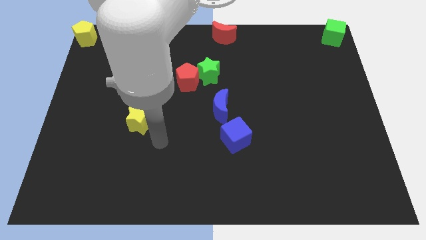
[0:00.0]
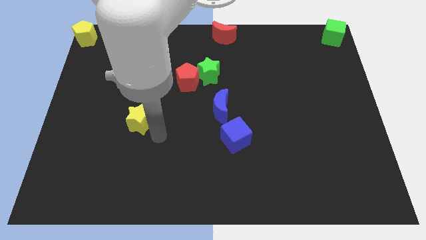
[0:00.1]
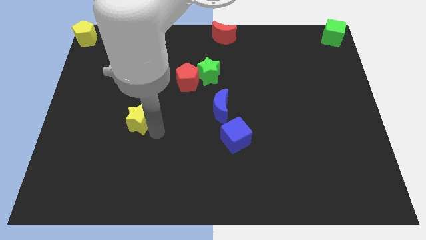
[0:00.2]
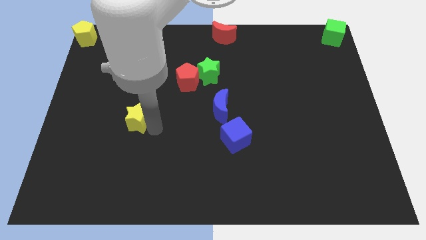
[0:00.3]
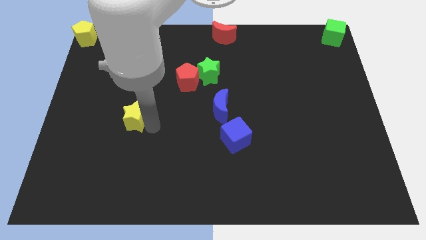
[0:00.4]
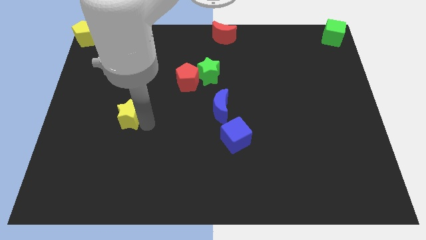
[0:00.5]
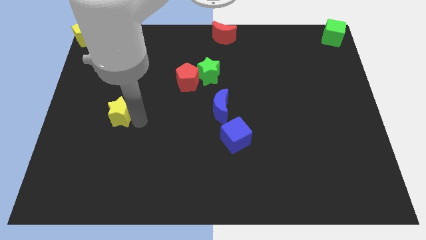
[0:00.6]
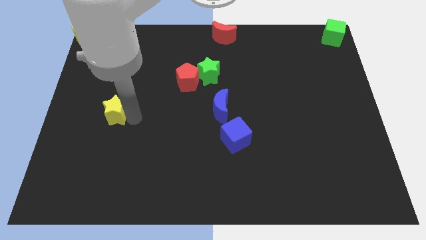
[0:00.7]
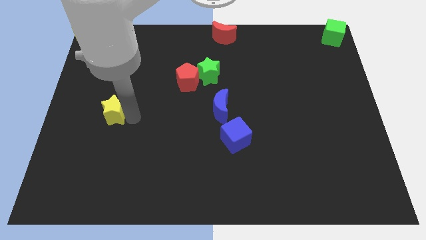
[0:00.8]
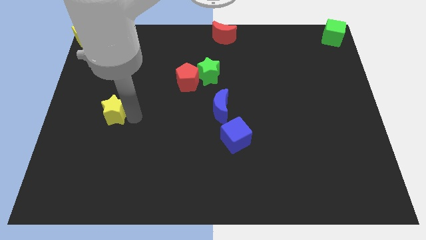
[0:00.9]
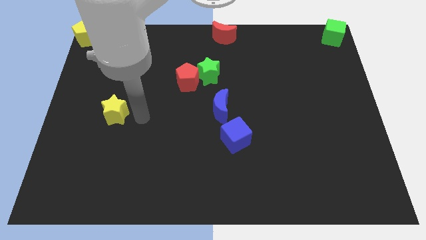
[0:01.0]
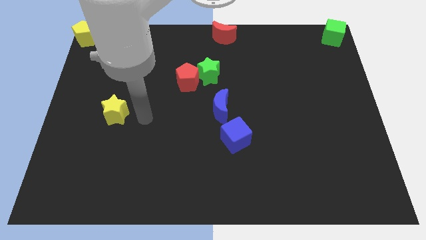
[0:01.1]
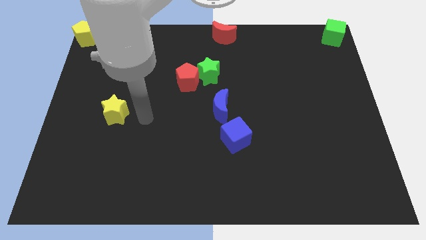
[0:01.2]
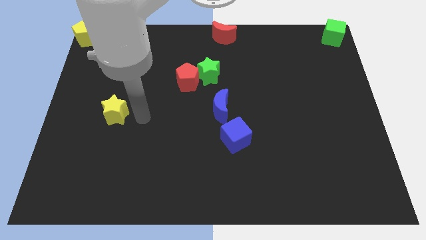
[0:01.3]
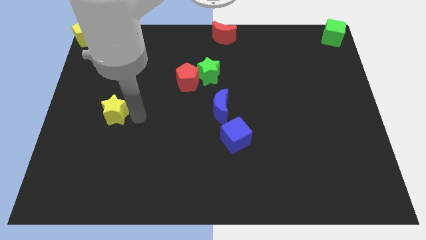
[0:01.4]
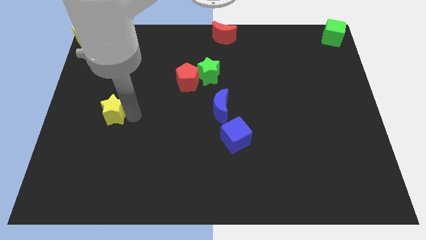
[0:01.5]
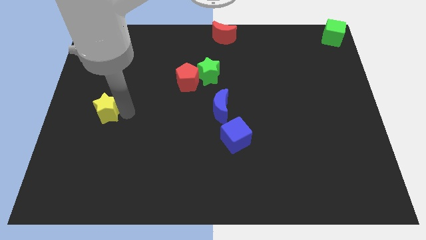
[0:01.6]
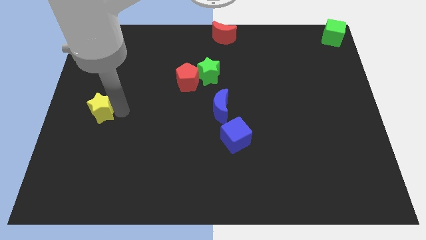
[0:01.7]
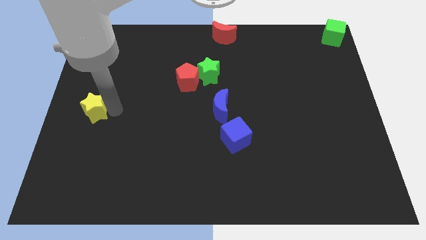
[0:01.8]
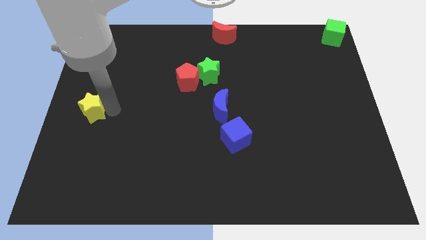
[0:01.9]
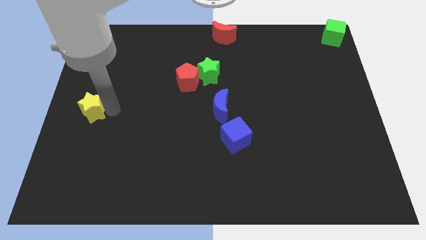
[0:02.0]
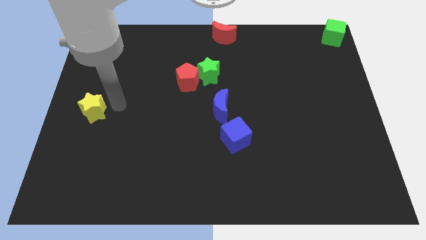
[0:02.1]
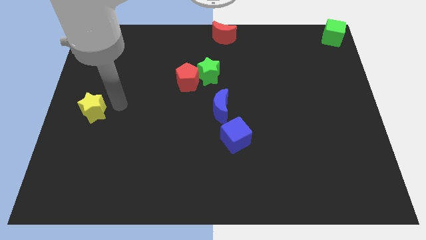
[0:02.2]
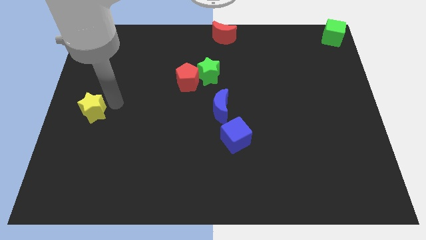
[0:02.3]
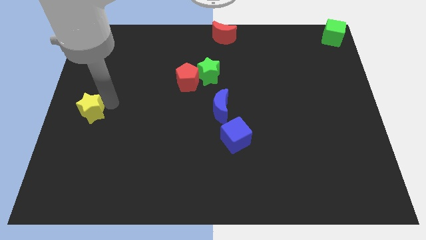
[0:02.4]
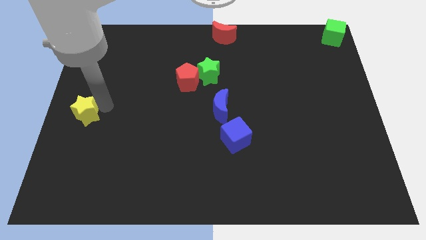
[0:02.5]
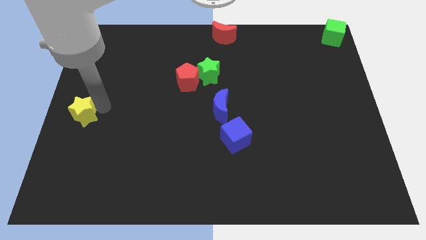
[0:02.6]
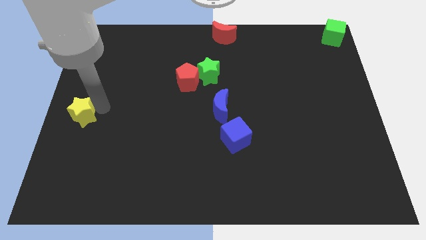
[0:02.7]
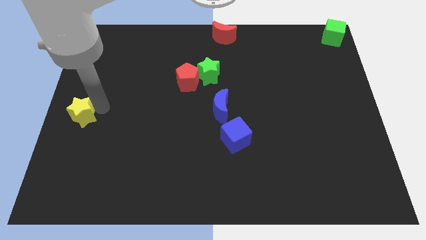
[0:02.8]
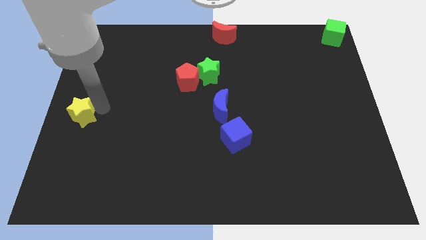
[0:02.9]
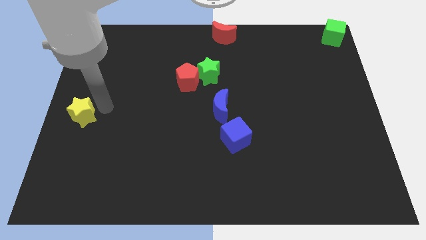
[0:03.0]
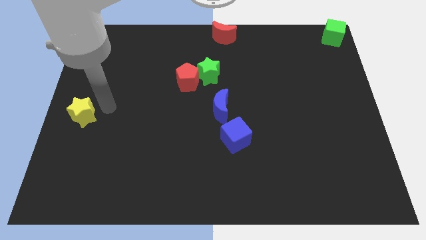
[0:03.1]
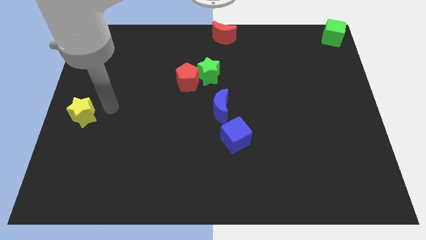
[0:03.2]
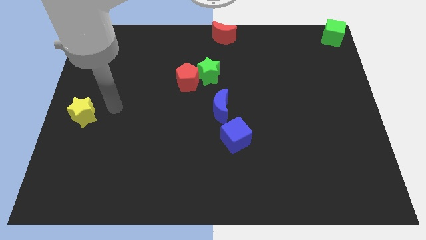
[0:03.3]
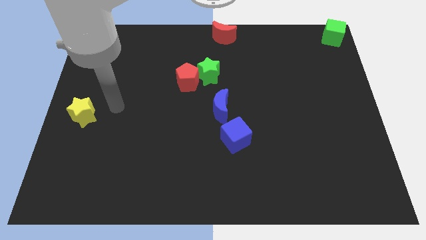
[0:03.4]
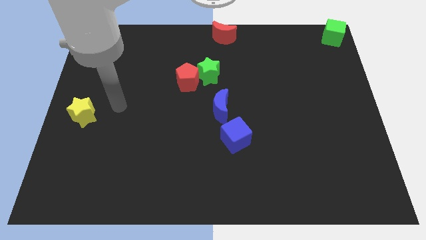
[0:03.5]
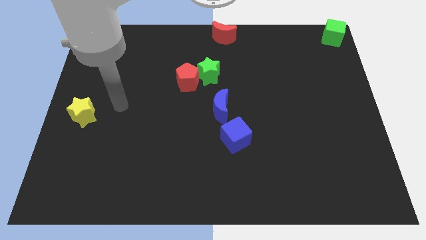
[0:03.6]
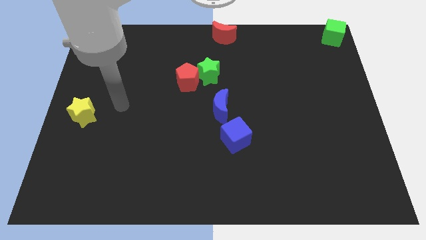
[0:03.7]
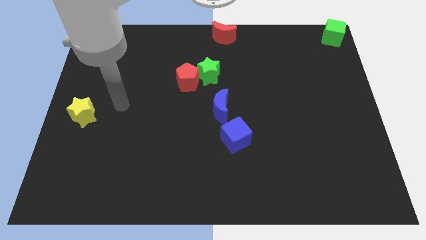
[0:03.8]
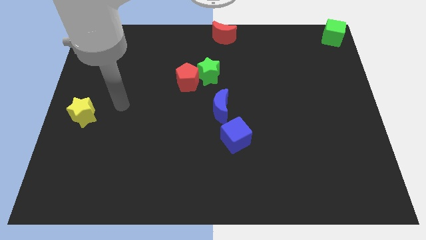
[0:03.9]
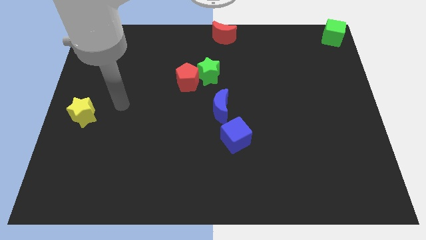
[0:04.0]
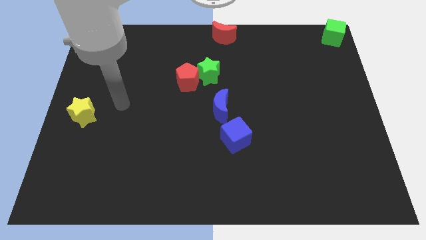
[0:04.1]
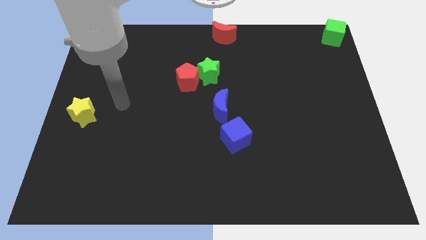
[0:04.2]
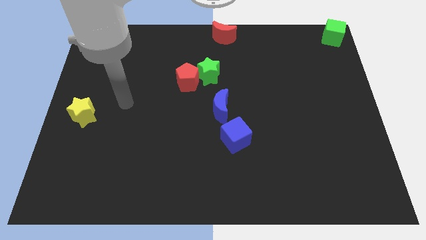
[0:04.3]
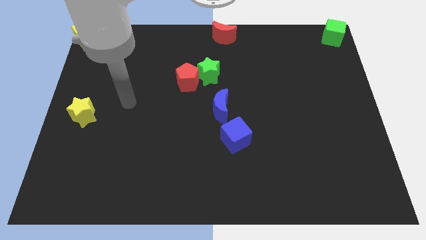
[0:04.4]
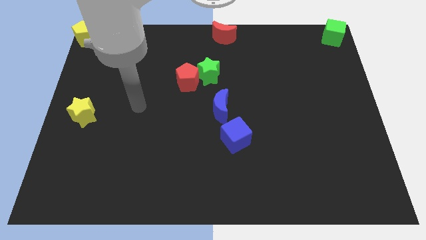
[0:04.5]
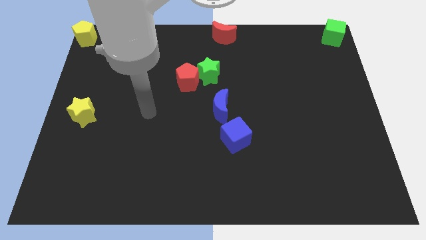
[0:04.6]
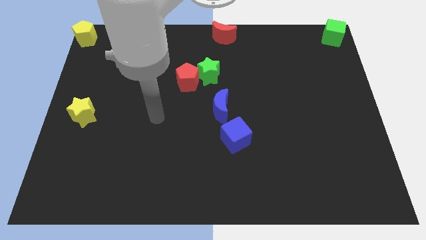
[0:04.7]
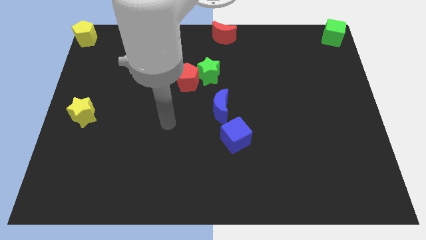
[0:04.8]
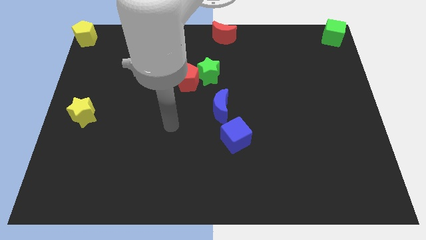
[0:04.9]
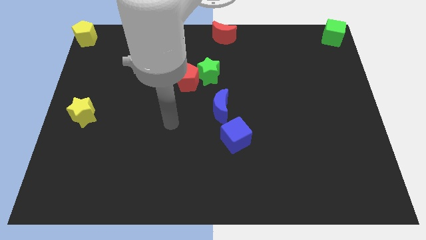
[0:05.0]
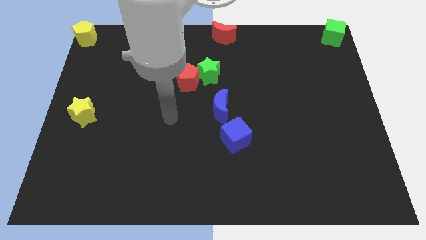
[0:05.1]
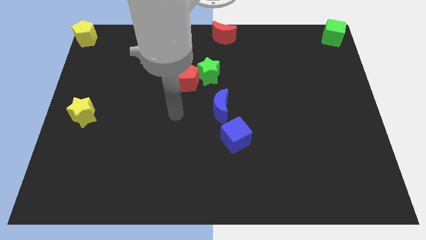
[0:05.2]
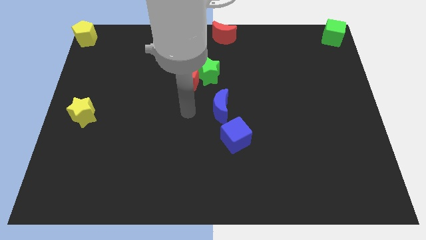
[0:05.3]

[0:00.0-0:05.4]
drag the yellow star to the center left of the board

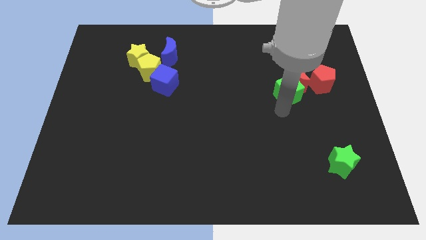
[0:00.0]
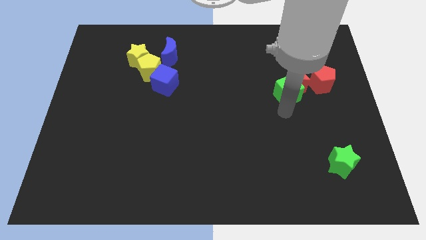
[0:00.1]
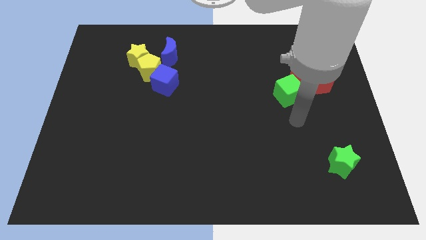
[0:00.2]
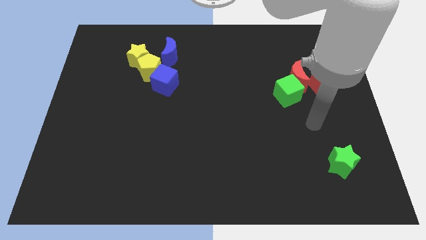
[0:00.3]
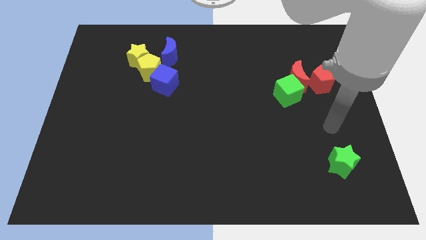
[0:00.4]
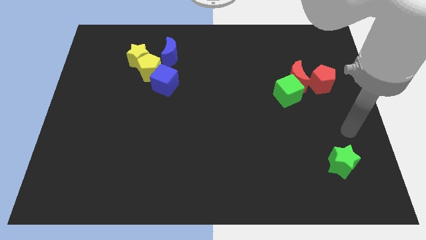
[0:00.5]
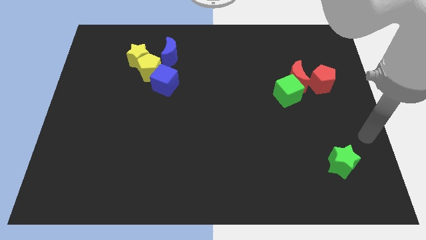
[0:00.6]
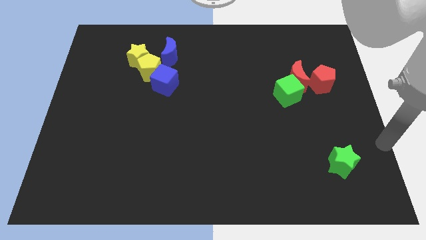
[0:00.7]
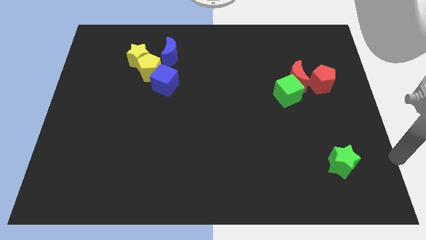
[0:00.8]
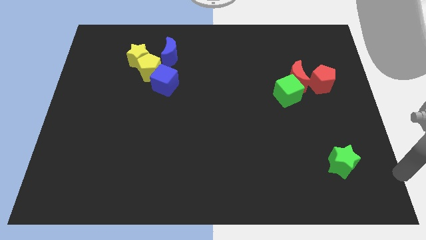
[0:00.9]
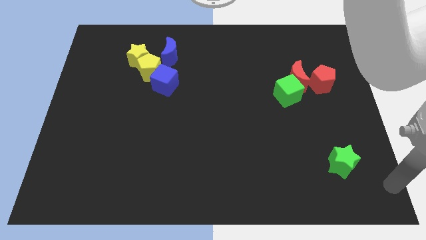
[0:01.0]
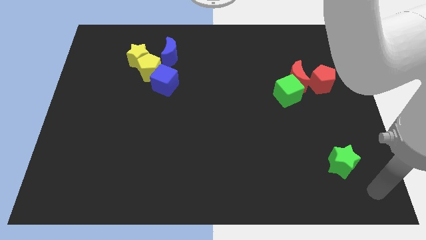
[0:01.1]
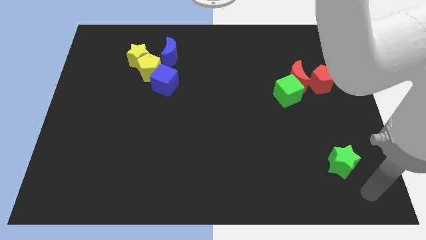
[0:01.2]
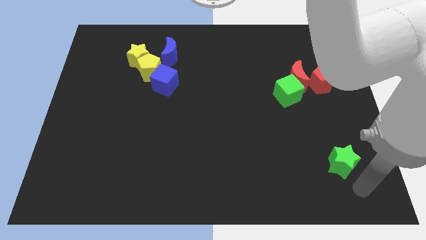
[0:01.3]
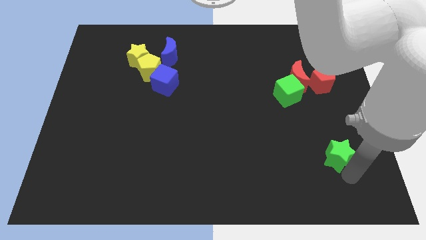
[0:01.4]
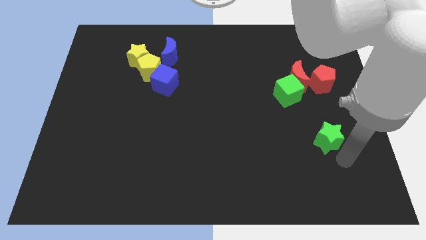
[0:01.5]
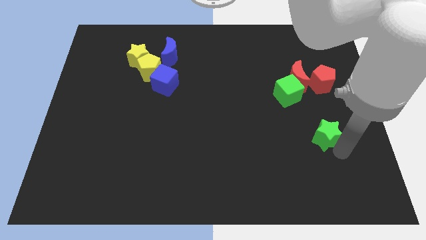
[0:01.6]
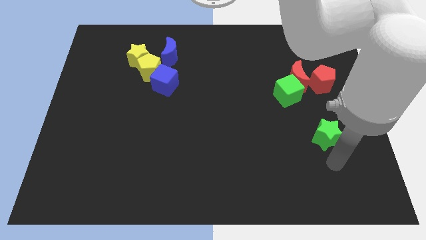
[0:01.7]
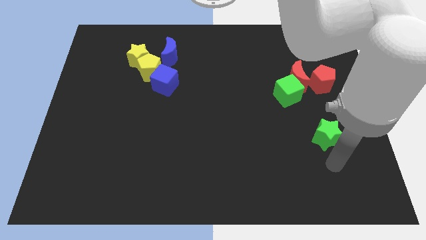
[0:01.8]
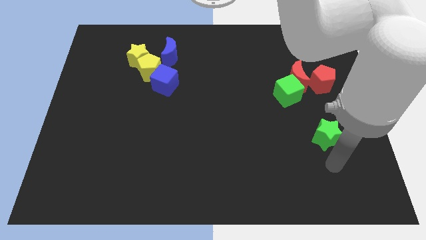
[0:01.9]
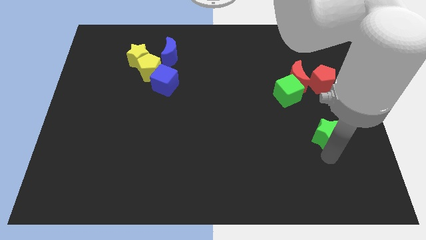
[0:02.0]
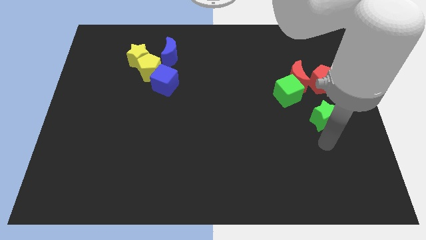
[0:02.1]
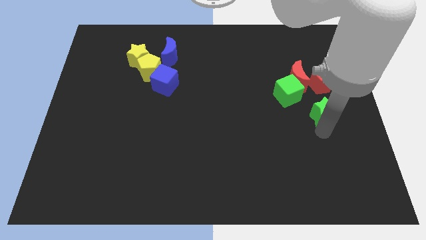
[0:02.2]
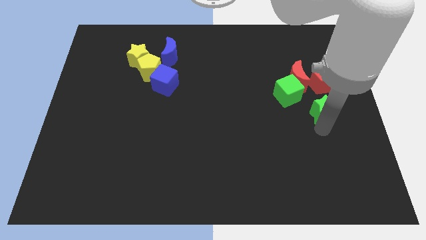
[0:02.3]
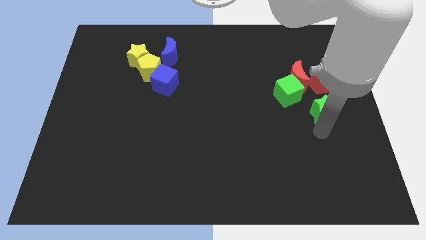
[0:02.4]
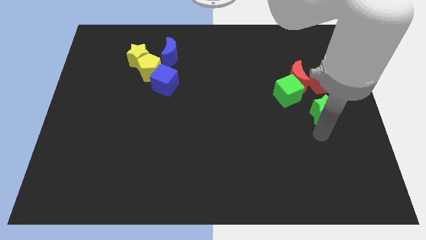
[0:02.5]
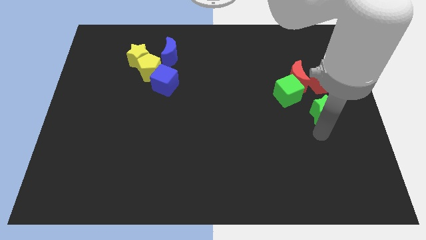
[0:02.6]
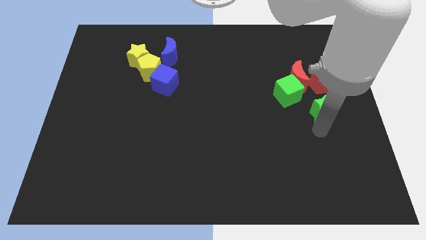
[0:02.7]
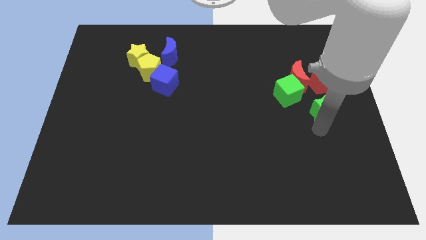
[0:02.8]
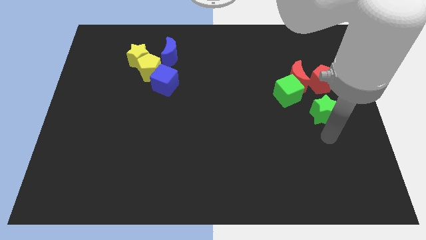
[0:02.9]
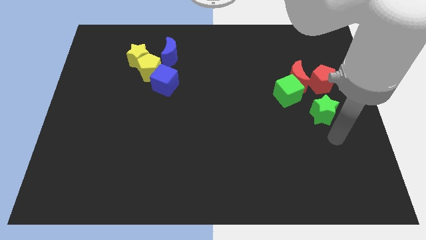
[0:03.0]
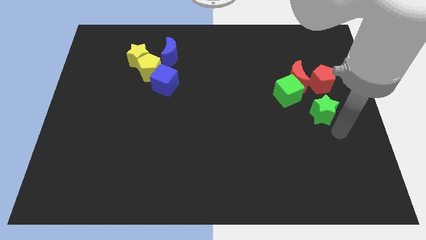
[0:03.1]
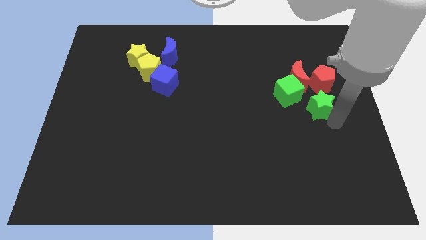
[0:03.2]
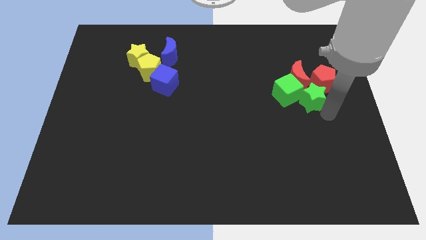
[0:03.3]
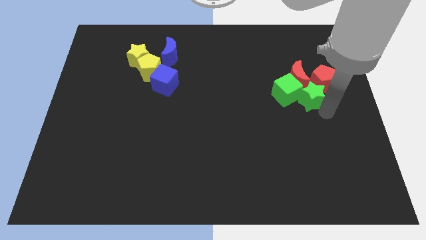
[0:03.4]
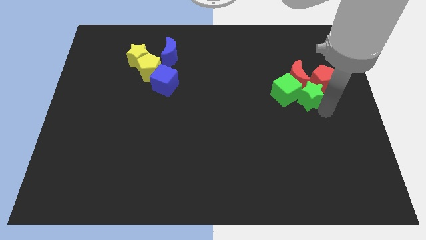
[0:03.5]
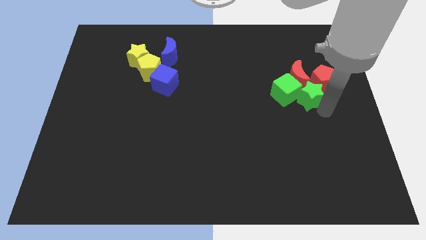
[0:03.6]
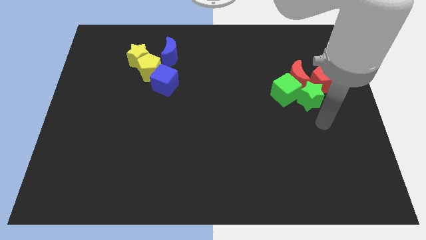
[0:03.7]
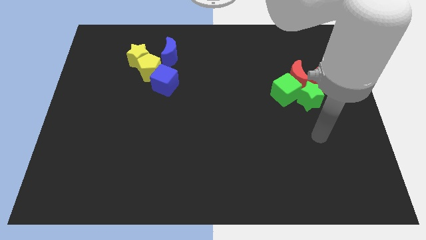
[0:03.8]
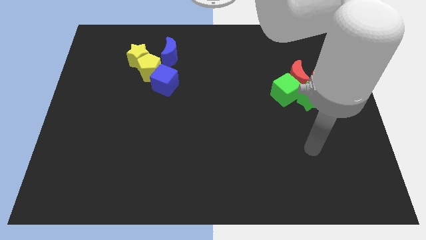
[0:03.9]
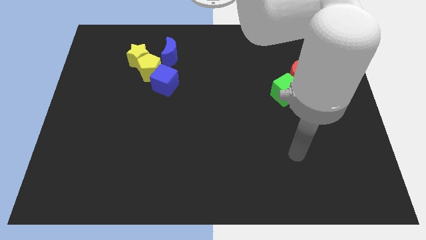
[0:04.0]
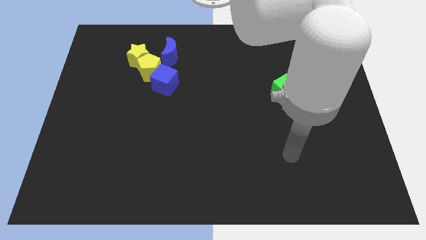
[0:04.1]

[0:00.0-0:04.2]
push the green star into the green cube
